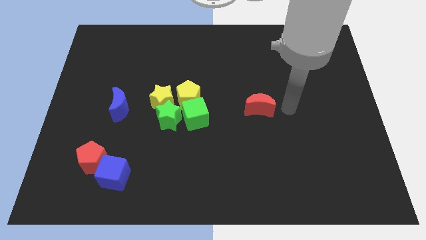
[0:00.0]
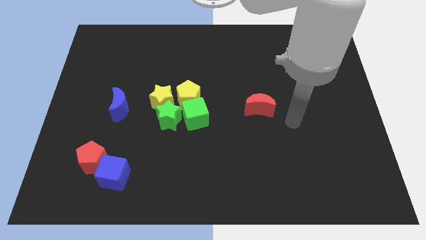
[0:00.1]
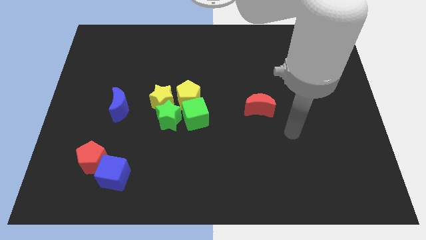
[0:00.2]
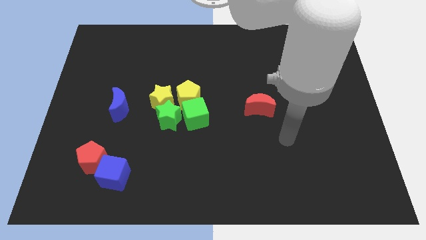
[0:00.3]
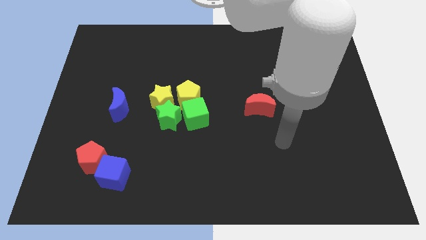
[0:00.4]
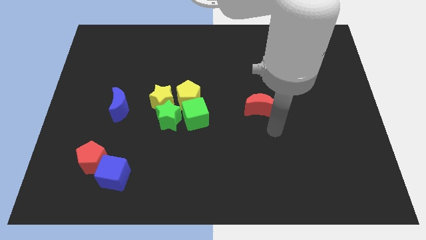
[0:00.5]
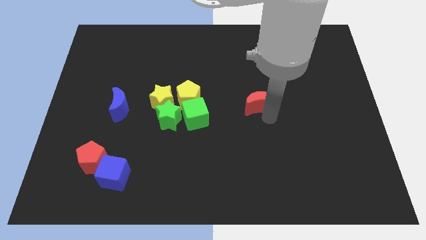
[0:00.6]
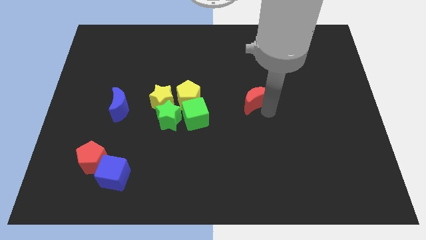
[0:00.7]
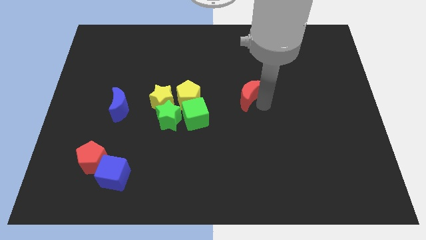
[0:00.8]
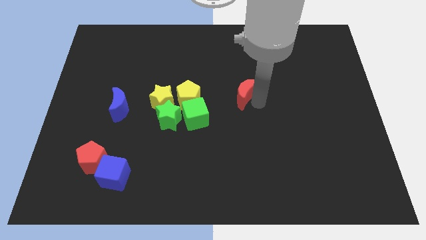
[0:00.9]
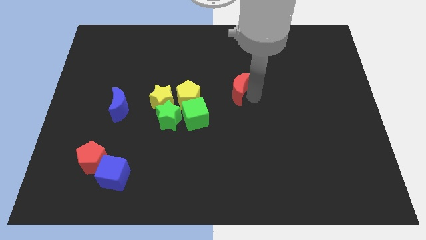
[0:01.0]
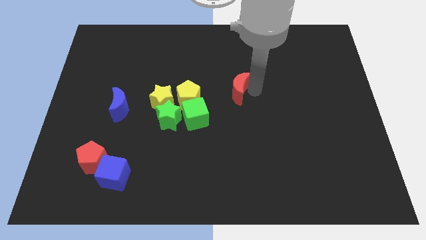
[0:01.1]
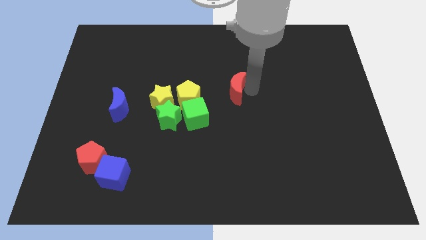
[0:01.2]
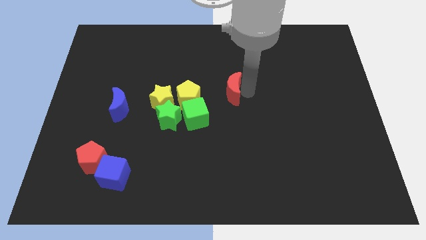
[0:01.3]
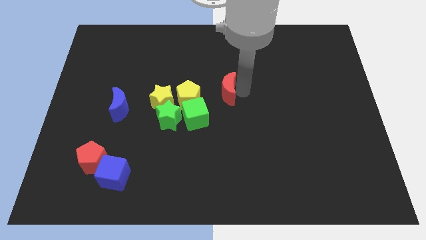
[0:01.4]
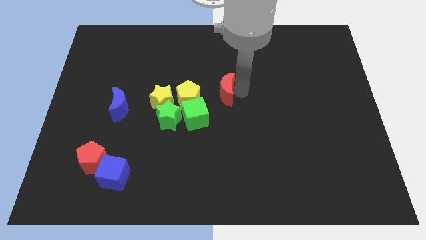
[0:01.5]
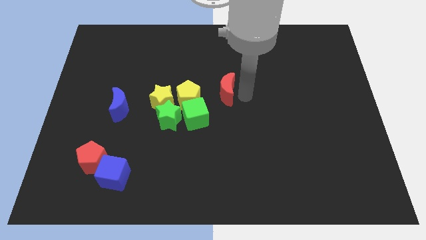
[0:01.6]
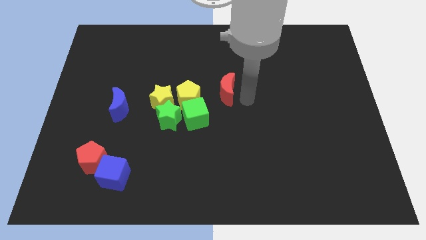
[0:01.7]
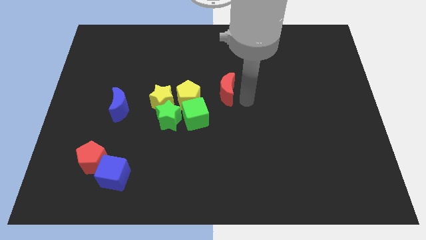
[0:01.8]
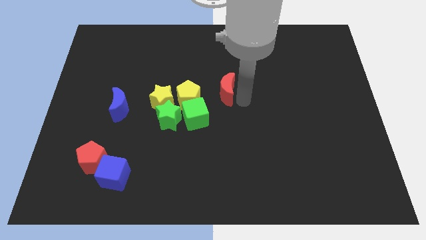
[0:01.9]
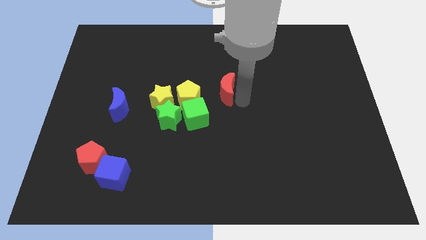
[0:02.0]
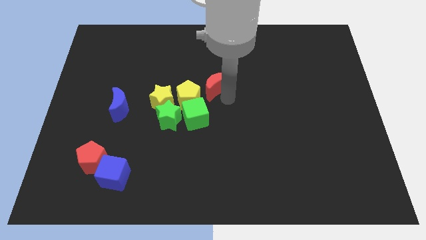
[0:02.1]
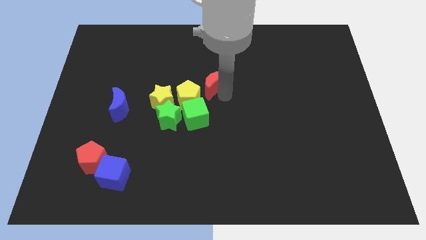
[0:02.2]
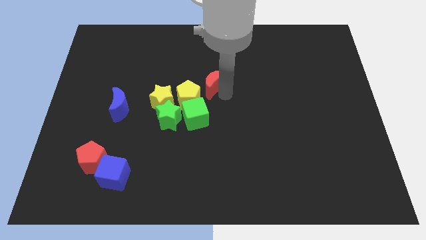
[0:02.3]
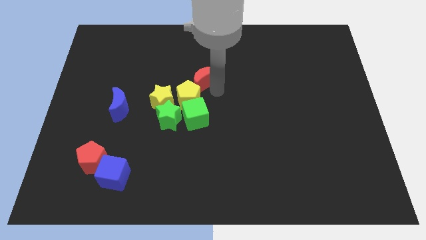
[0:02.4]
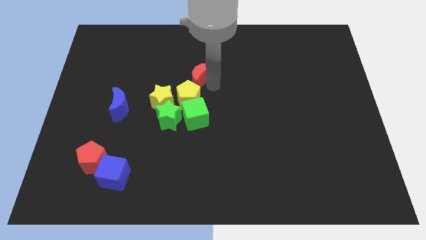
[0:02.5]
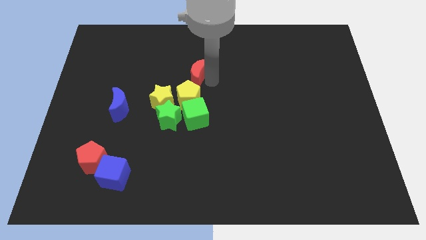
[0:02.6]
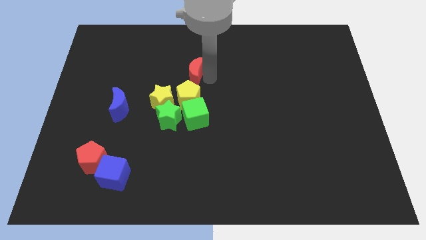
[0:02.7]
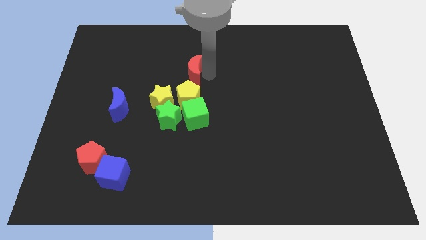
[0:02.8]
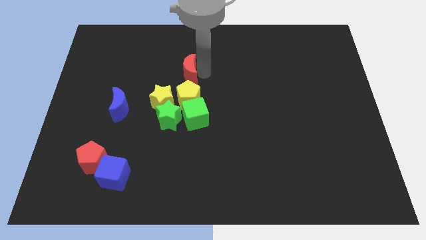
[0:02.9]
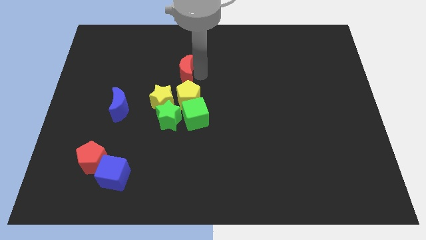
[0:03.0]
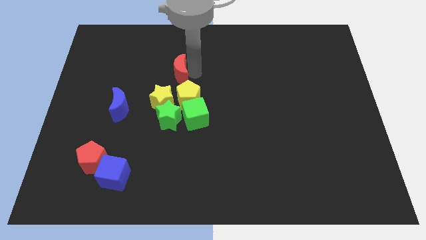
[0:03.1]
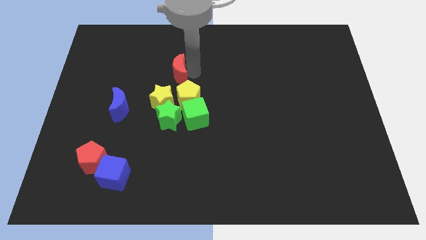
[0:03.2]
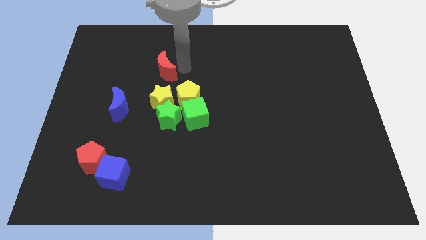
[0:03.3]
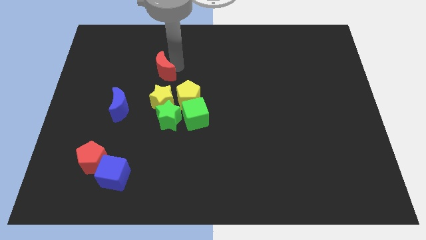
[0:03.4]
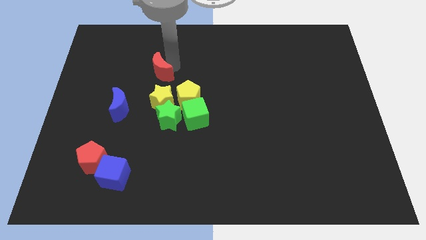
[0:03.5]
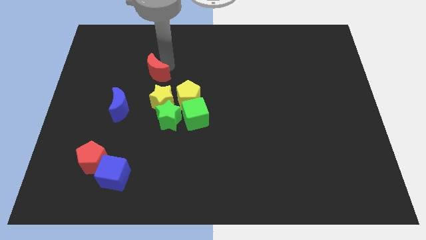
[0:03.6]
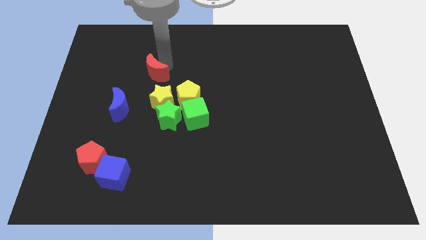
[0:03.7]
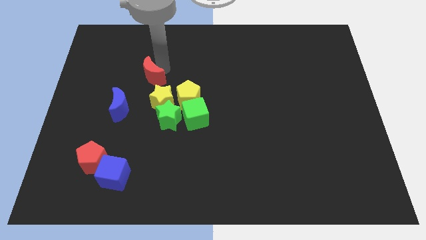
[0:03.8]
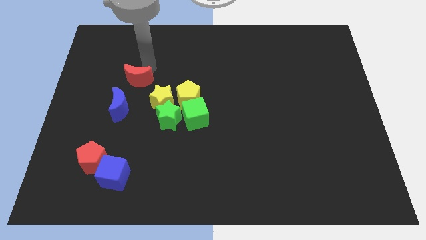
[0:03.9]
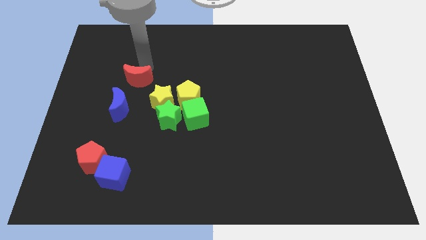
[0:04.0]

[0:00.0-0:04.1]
slide red moon to top left of yellow star

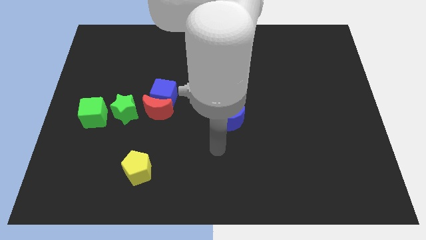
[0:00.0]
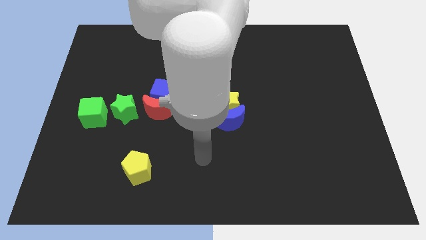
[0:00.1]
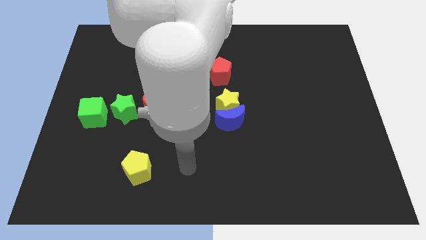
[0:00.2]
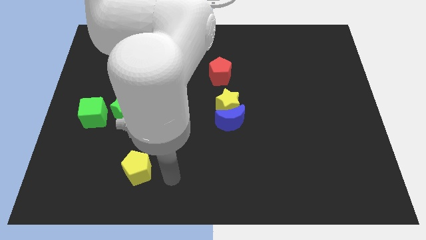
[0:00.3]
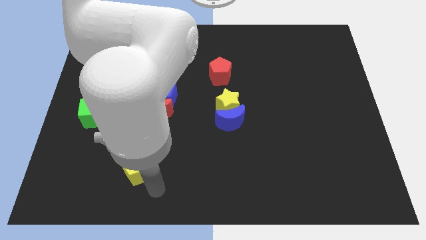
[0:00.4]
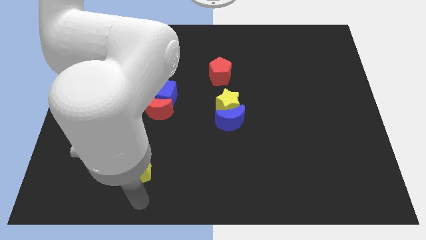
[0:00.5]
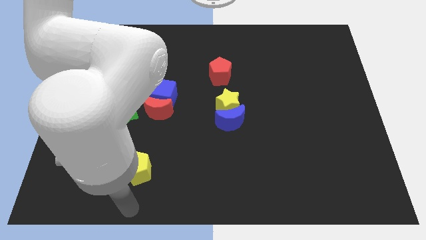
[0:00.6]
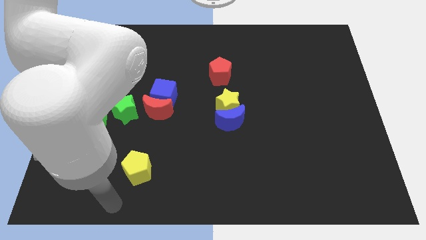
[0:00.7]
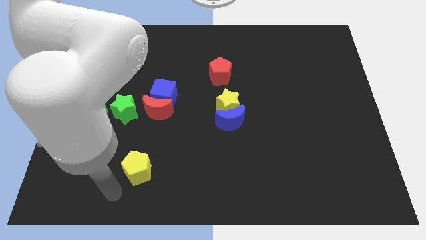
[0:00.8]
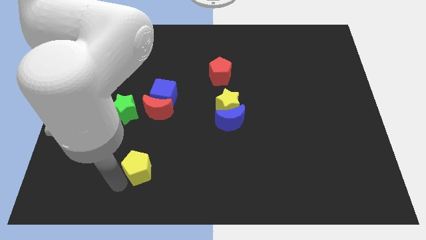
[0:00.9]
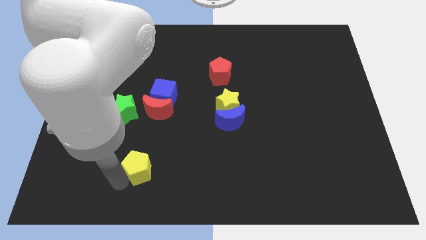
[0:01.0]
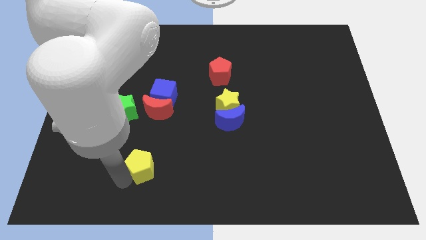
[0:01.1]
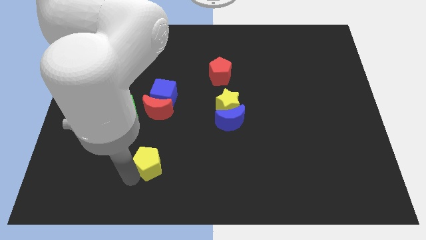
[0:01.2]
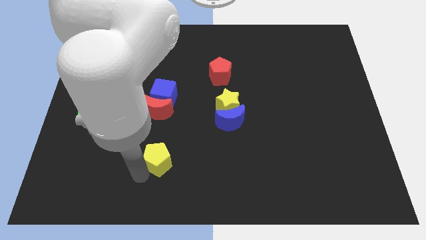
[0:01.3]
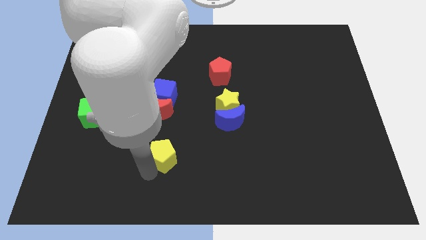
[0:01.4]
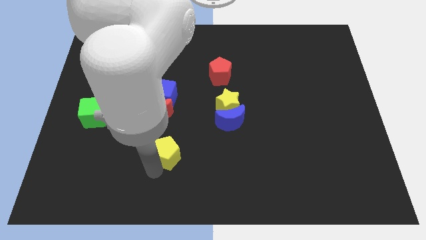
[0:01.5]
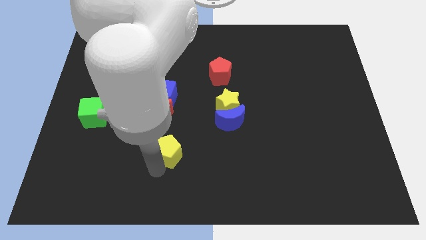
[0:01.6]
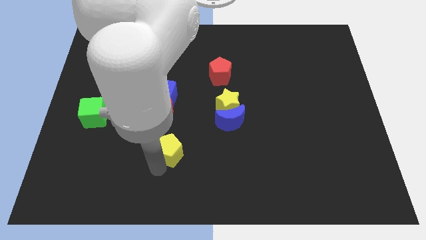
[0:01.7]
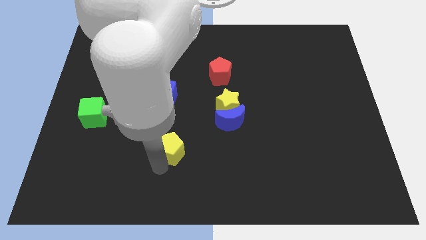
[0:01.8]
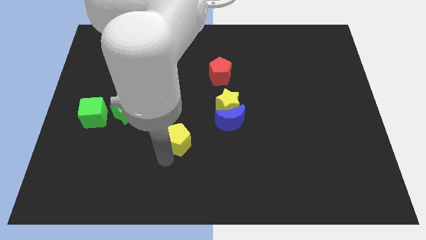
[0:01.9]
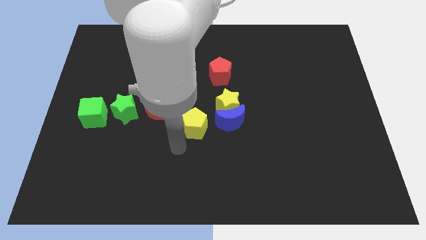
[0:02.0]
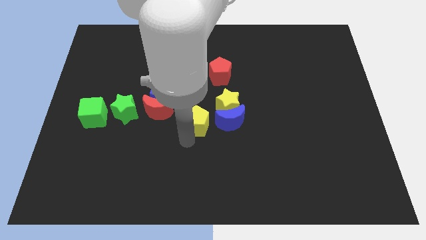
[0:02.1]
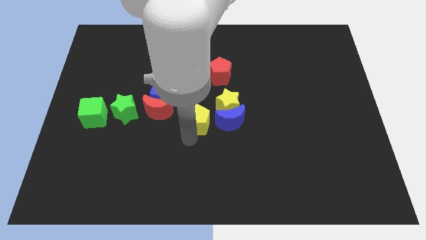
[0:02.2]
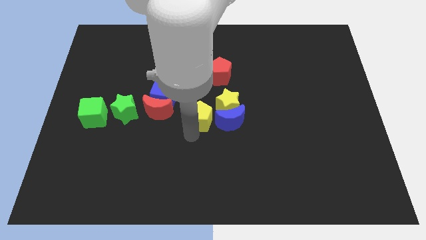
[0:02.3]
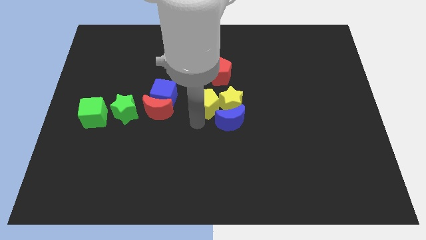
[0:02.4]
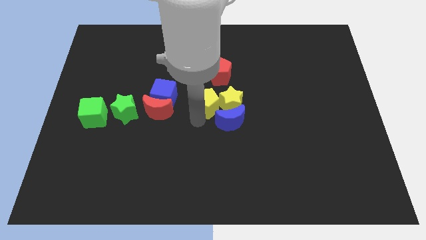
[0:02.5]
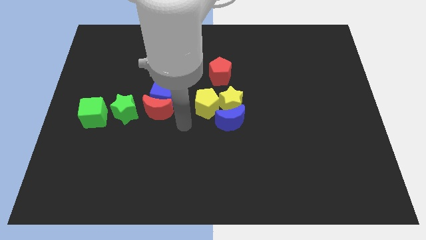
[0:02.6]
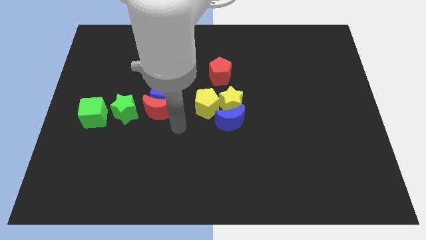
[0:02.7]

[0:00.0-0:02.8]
move the yellow pentagon left of thr yellow star

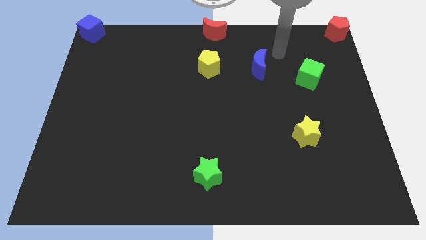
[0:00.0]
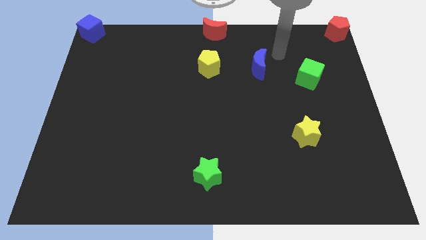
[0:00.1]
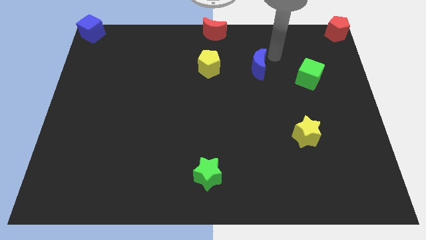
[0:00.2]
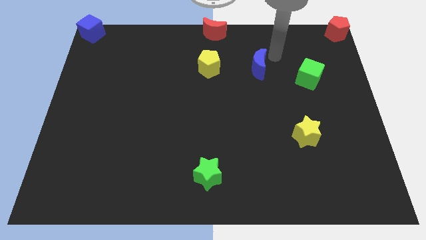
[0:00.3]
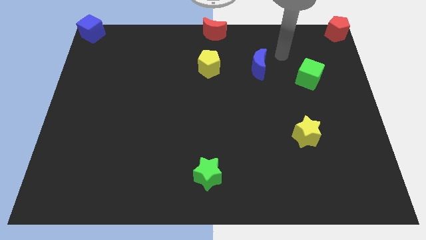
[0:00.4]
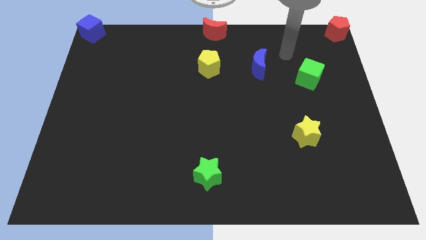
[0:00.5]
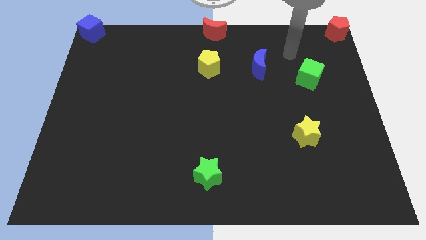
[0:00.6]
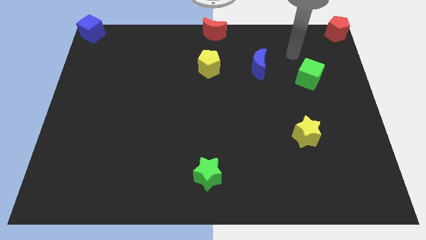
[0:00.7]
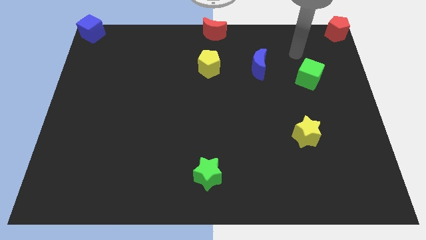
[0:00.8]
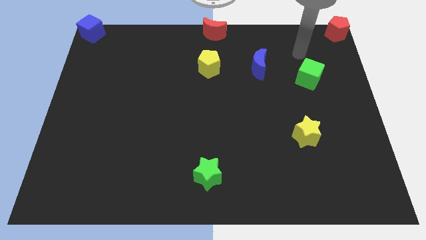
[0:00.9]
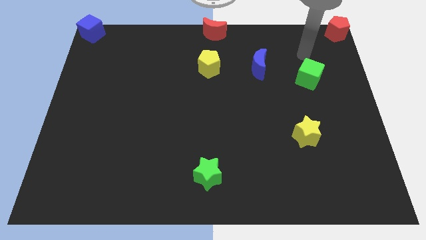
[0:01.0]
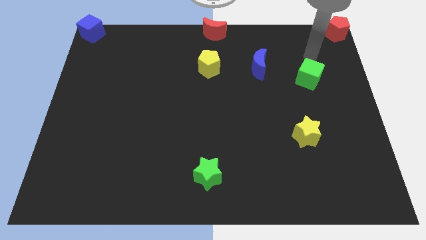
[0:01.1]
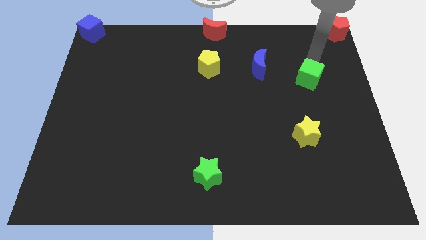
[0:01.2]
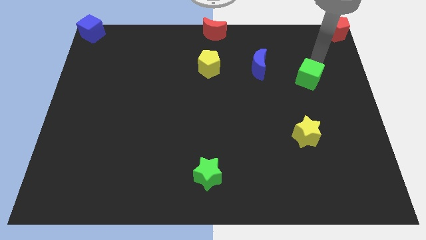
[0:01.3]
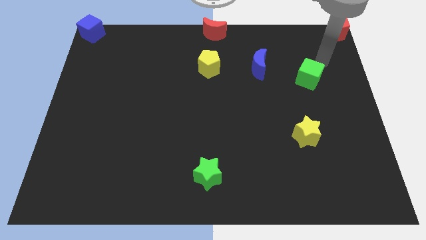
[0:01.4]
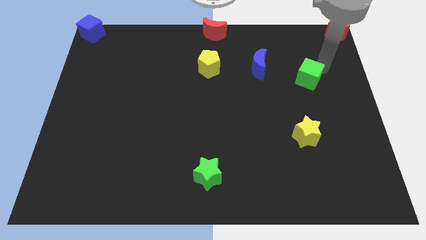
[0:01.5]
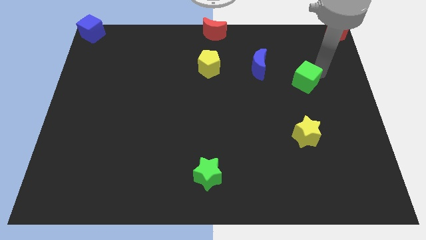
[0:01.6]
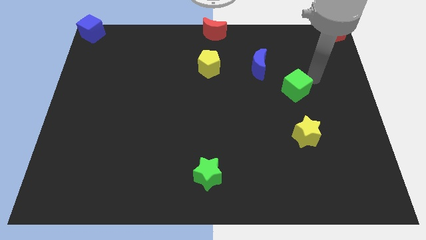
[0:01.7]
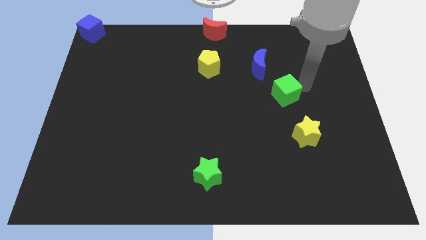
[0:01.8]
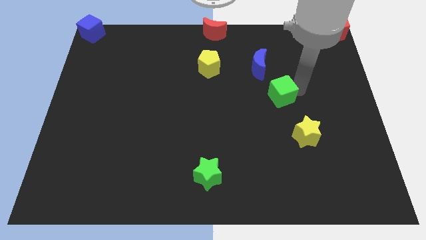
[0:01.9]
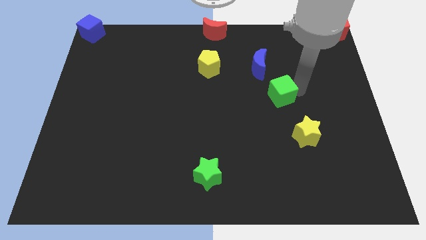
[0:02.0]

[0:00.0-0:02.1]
place the green cube down the blue moon
